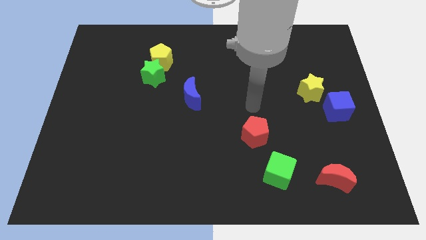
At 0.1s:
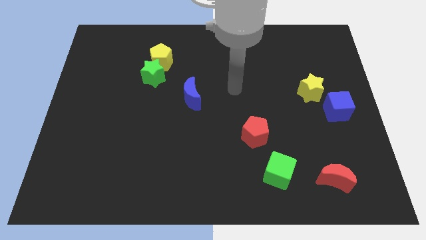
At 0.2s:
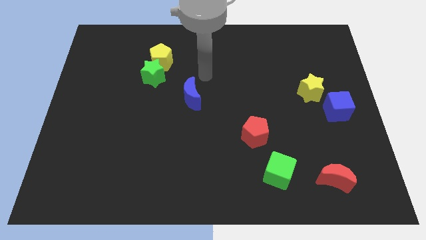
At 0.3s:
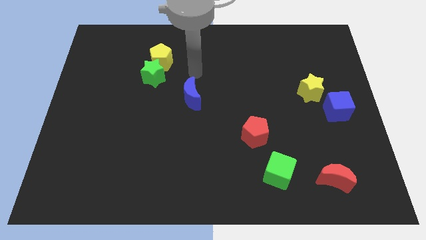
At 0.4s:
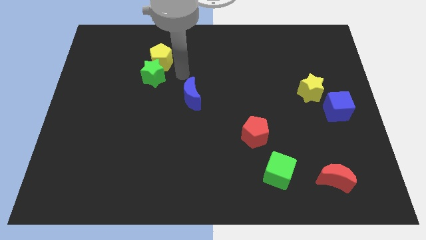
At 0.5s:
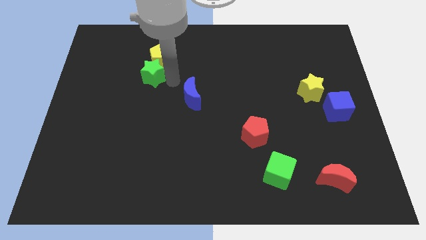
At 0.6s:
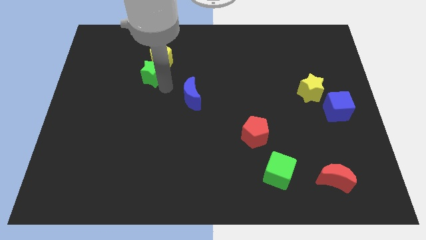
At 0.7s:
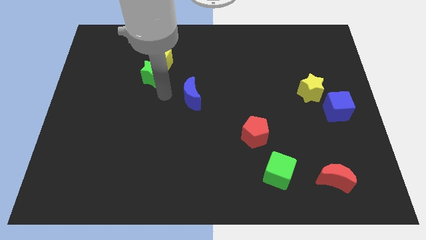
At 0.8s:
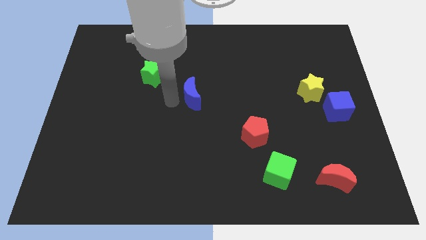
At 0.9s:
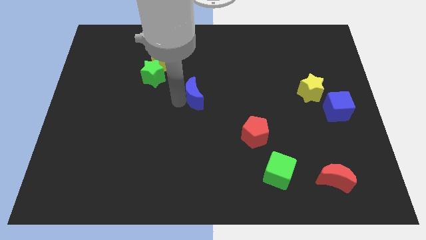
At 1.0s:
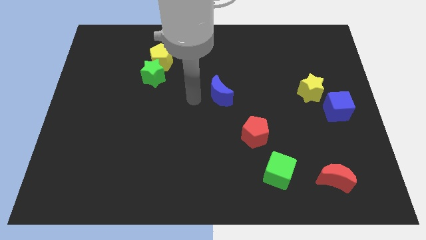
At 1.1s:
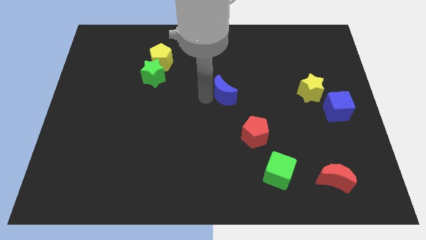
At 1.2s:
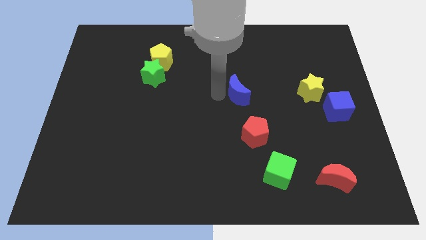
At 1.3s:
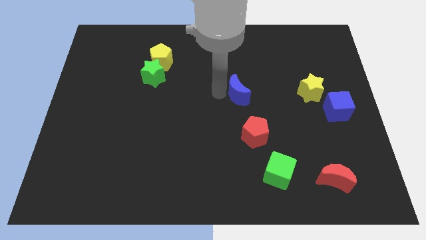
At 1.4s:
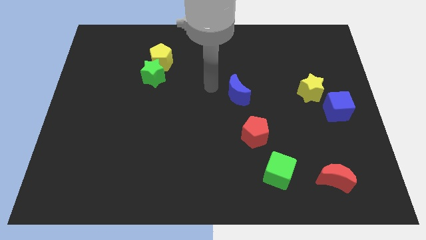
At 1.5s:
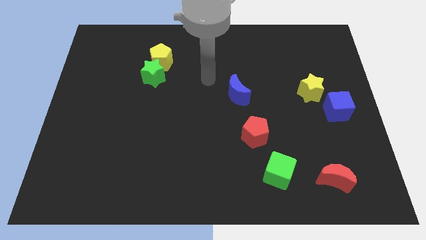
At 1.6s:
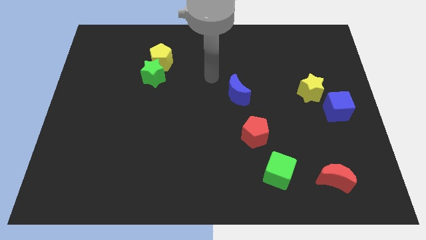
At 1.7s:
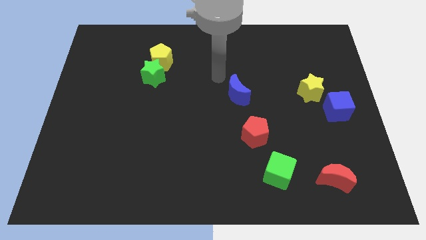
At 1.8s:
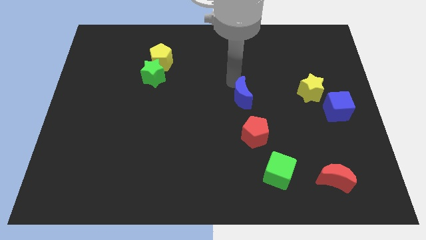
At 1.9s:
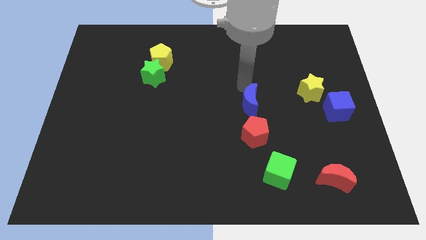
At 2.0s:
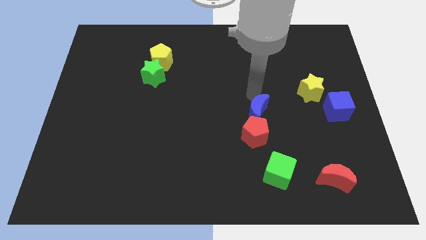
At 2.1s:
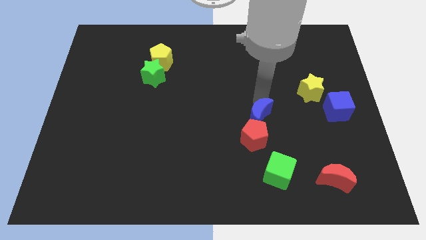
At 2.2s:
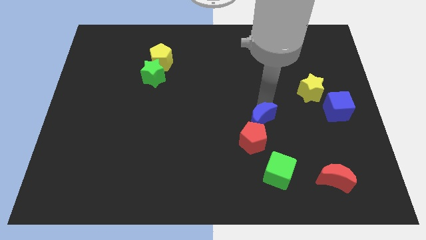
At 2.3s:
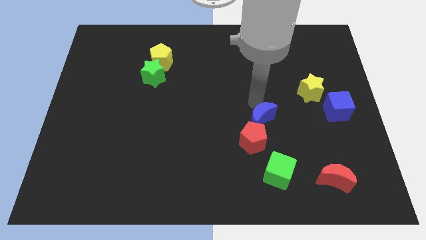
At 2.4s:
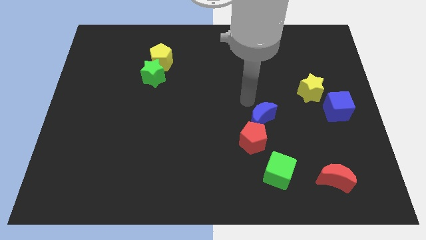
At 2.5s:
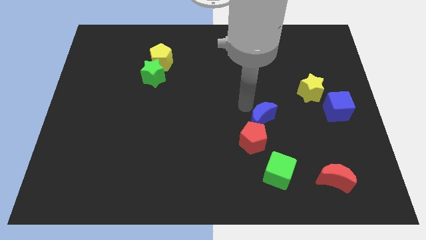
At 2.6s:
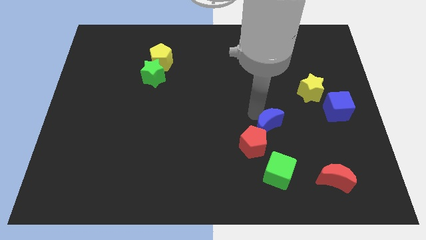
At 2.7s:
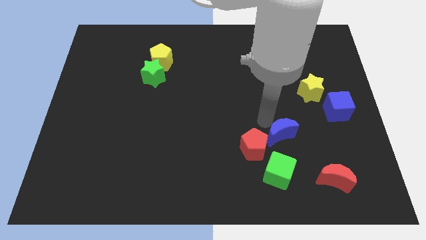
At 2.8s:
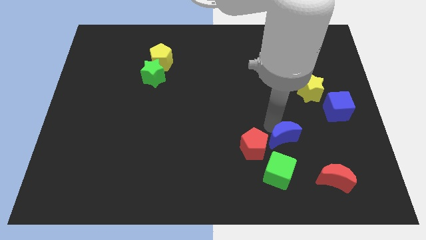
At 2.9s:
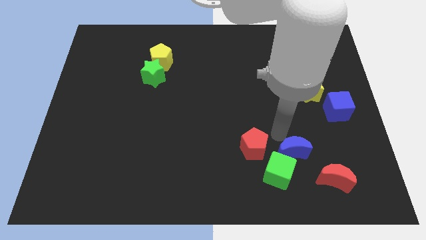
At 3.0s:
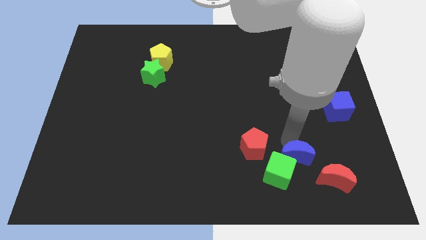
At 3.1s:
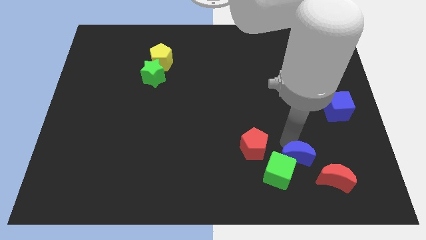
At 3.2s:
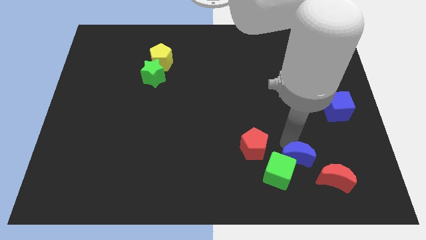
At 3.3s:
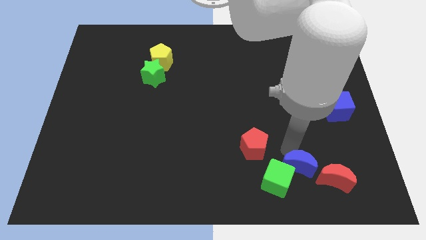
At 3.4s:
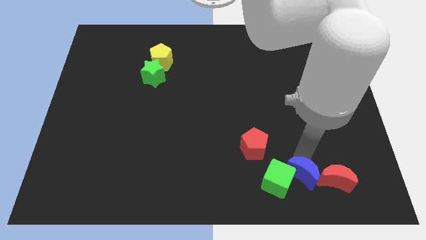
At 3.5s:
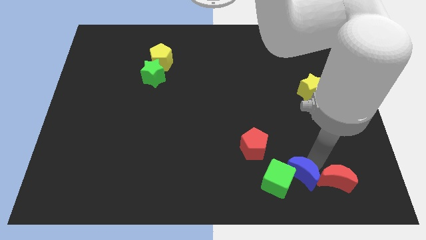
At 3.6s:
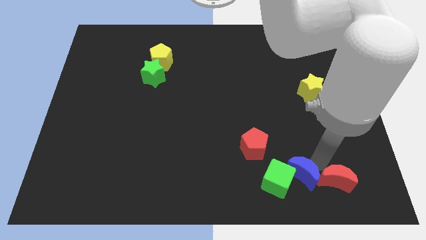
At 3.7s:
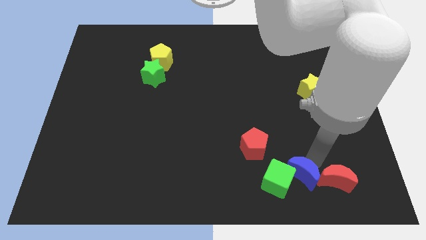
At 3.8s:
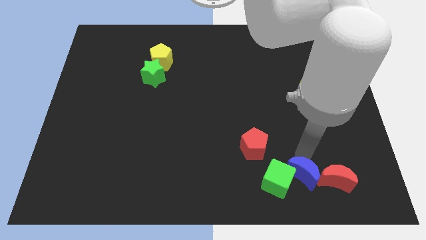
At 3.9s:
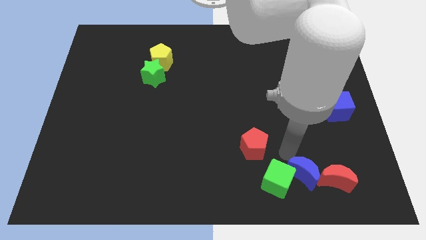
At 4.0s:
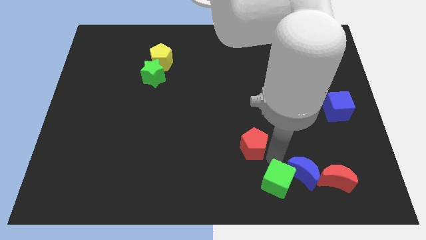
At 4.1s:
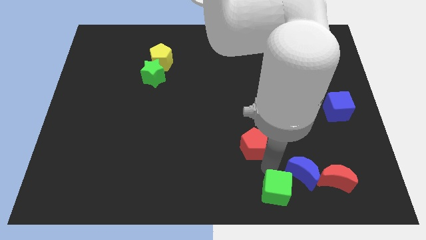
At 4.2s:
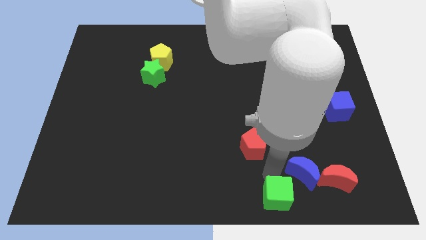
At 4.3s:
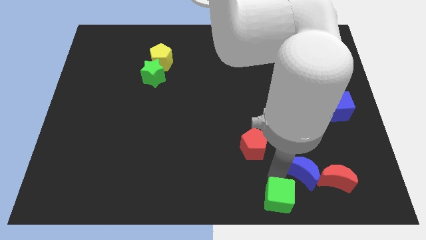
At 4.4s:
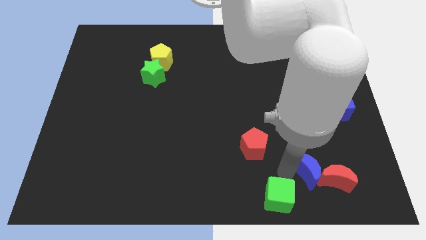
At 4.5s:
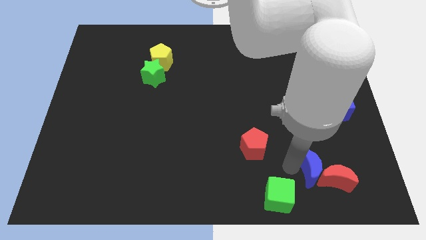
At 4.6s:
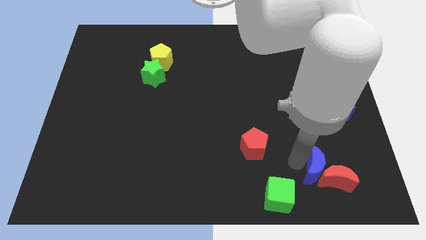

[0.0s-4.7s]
push the blue moon towards the red moon

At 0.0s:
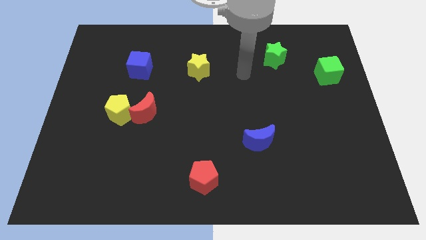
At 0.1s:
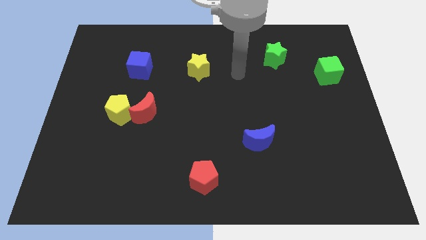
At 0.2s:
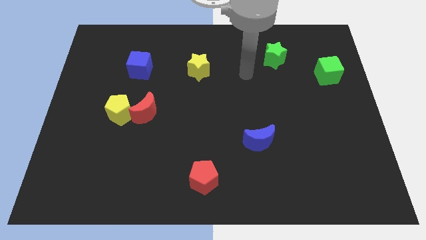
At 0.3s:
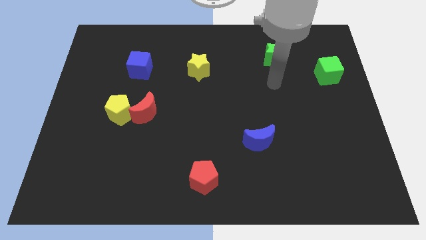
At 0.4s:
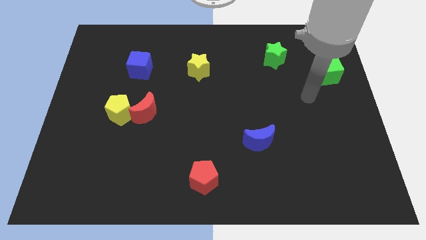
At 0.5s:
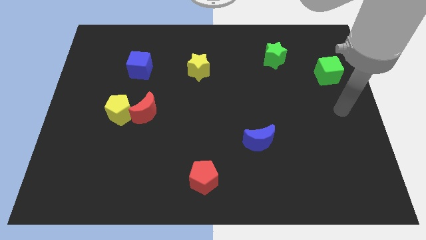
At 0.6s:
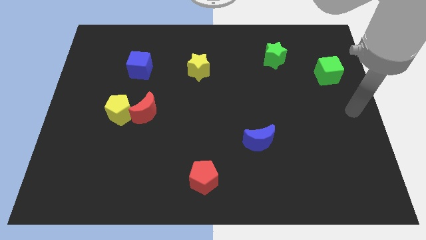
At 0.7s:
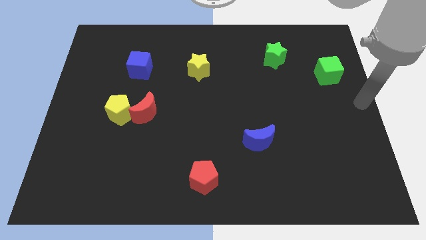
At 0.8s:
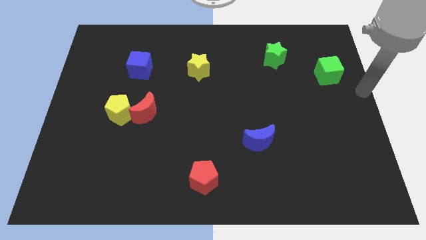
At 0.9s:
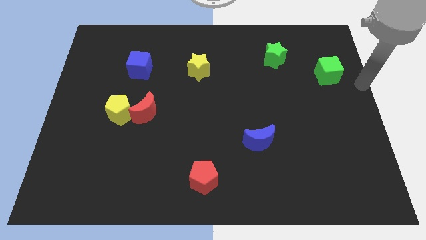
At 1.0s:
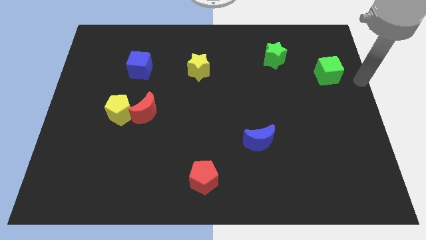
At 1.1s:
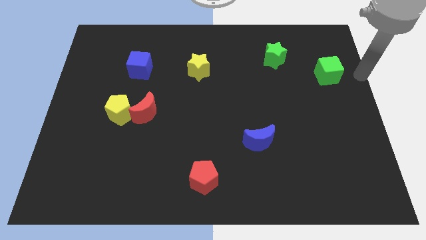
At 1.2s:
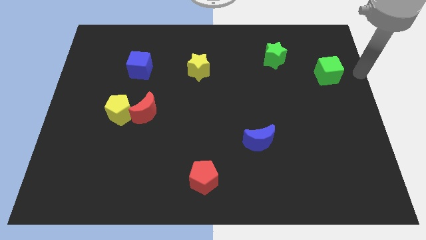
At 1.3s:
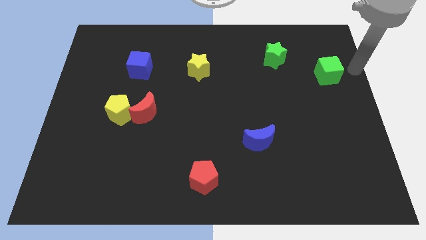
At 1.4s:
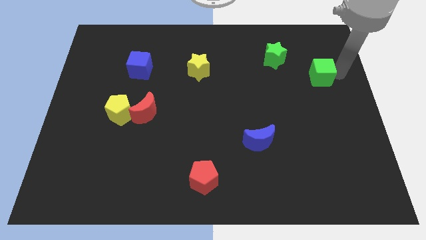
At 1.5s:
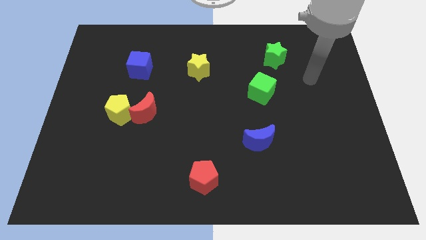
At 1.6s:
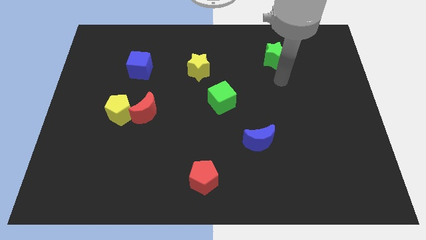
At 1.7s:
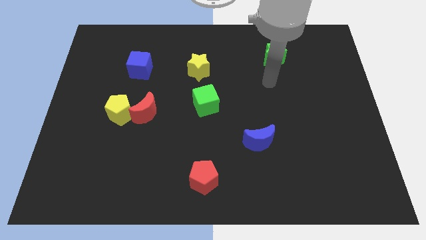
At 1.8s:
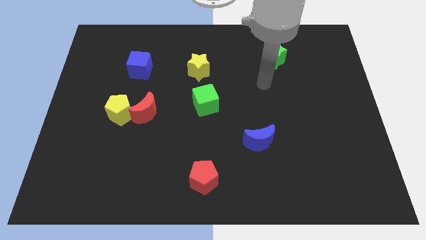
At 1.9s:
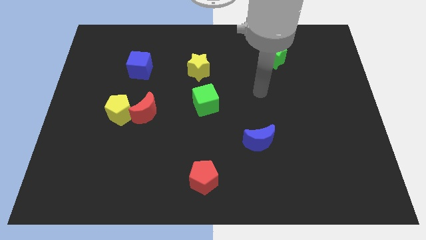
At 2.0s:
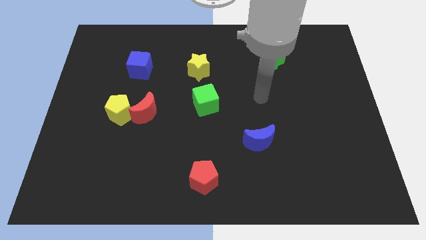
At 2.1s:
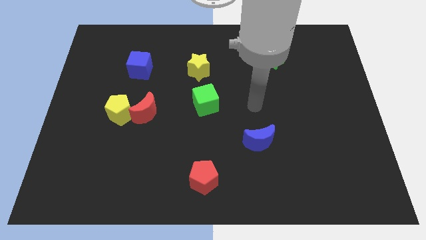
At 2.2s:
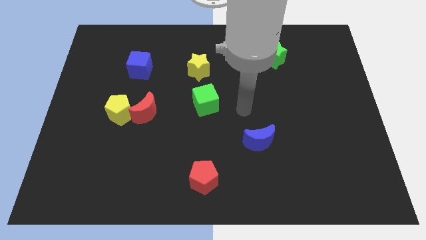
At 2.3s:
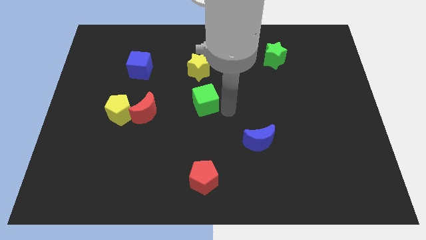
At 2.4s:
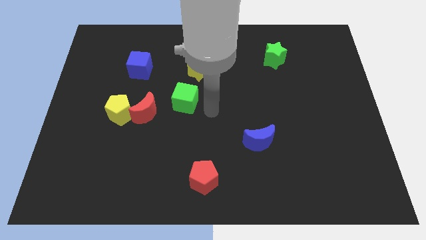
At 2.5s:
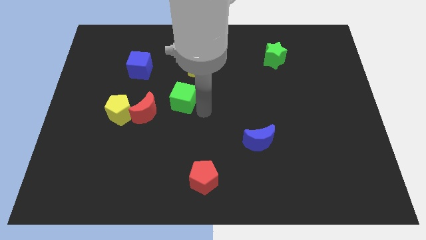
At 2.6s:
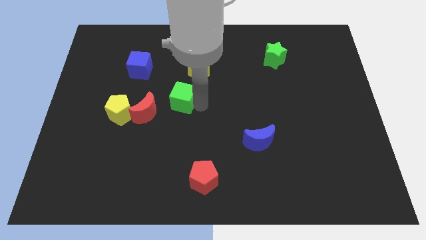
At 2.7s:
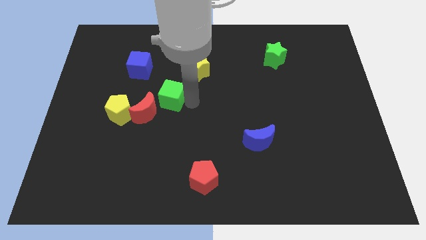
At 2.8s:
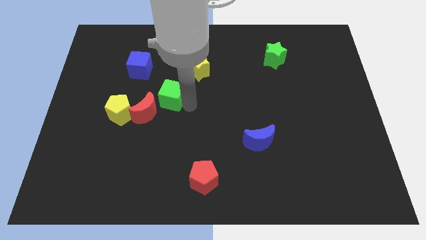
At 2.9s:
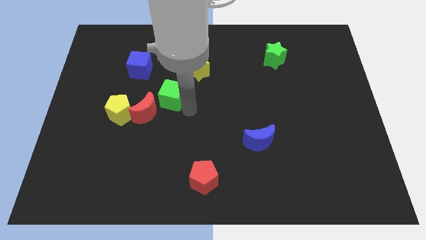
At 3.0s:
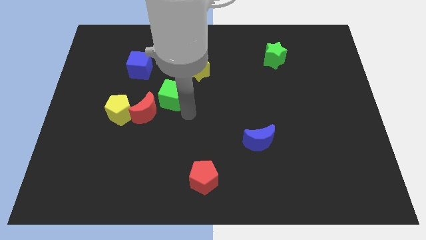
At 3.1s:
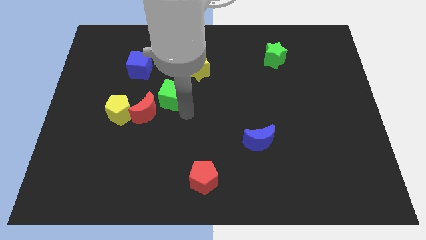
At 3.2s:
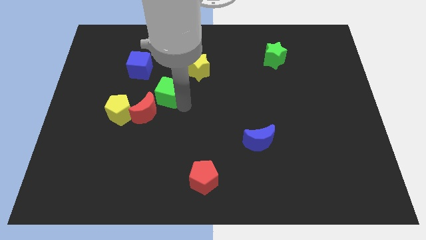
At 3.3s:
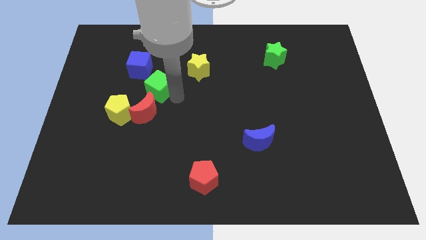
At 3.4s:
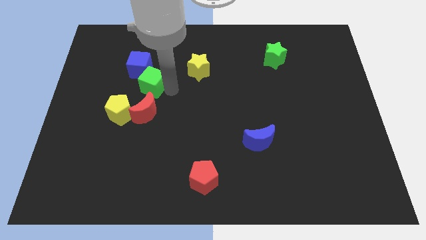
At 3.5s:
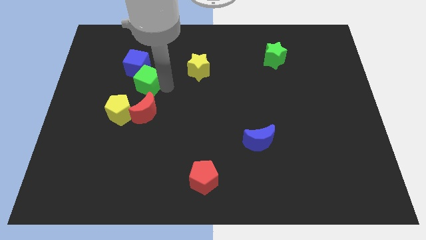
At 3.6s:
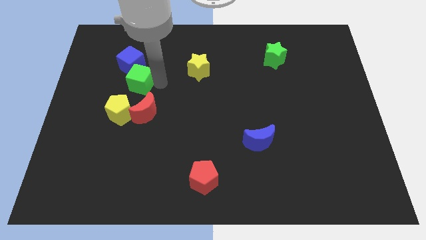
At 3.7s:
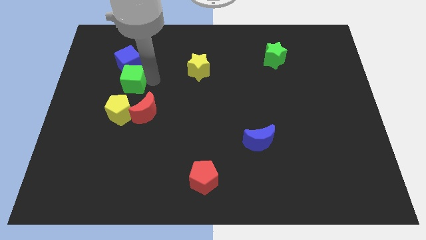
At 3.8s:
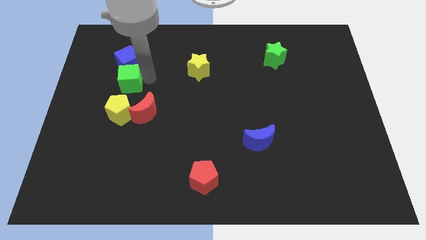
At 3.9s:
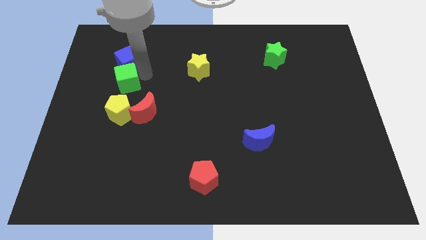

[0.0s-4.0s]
slide the green cube to the blue cube
